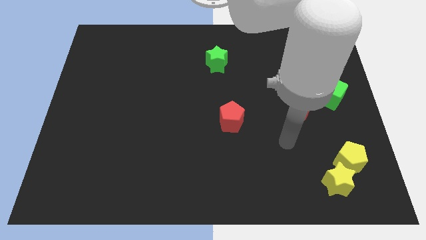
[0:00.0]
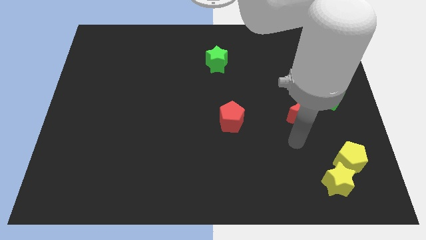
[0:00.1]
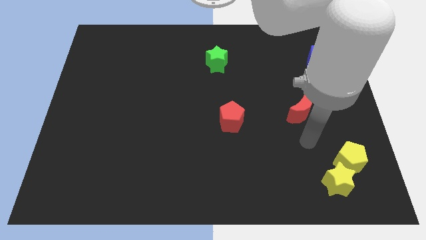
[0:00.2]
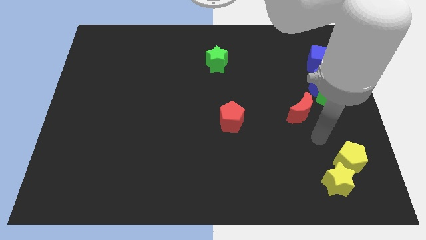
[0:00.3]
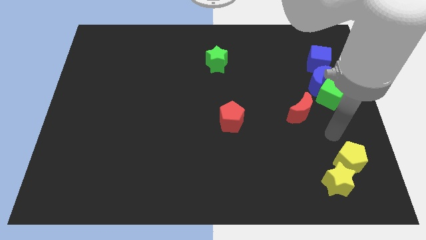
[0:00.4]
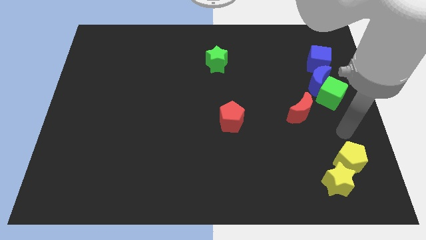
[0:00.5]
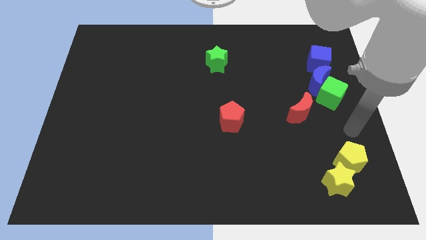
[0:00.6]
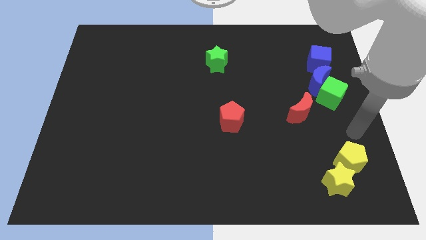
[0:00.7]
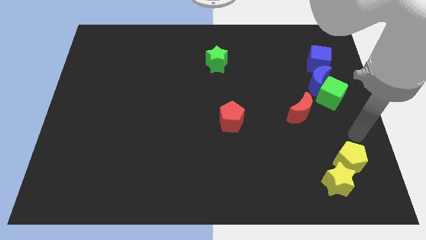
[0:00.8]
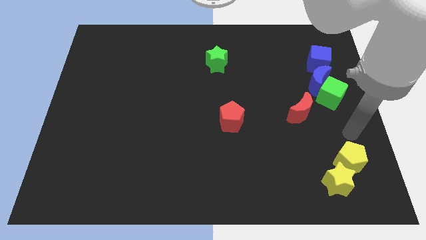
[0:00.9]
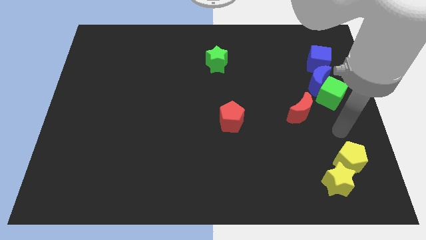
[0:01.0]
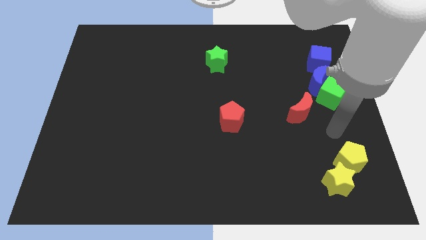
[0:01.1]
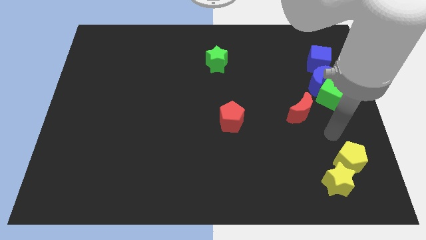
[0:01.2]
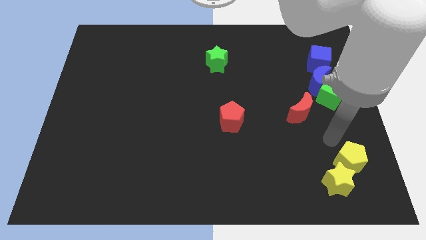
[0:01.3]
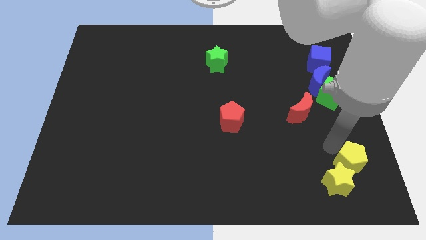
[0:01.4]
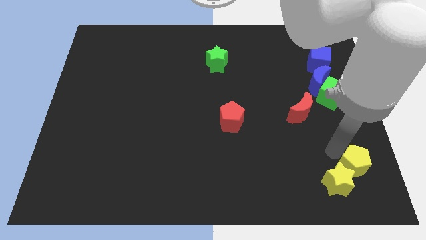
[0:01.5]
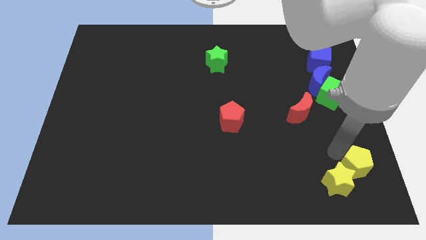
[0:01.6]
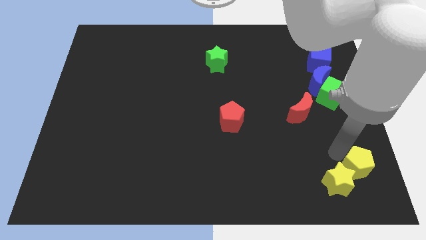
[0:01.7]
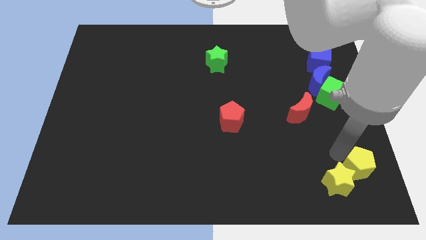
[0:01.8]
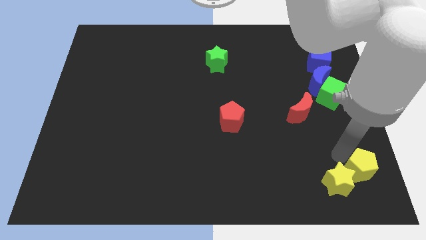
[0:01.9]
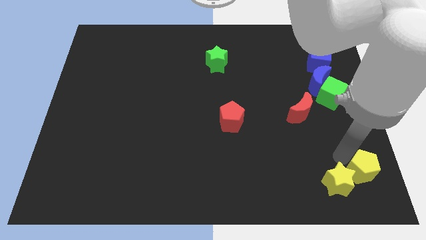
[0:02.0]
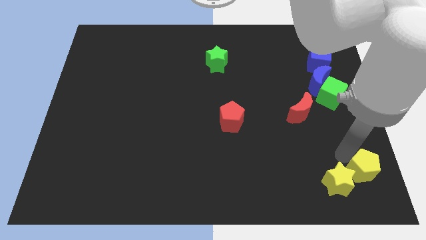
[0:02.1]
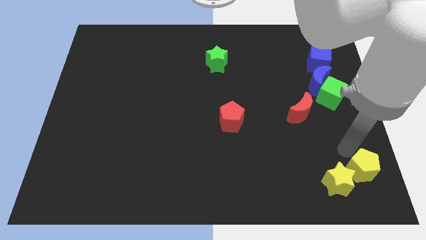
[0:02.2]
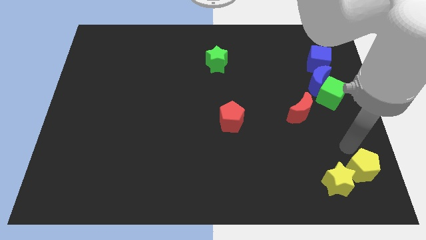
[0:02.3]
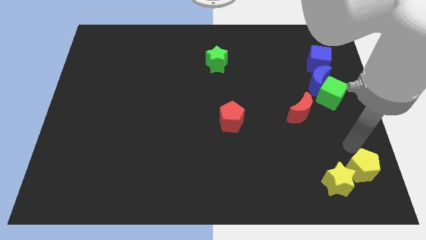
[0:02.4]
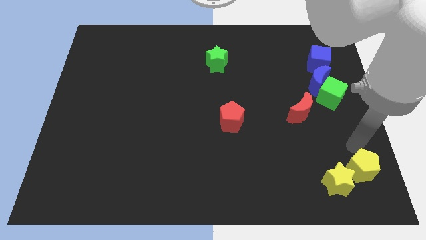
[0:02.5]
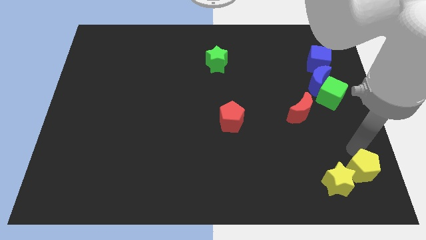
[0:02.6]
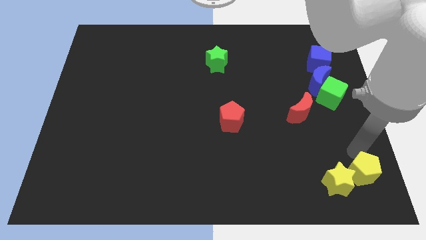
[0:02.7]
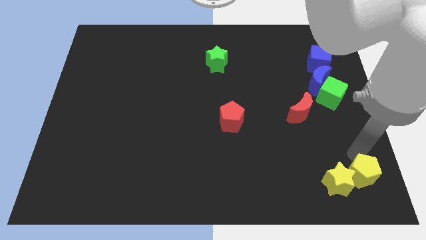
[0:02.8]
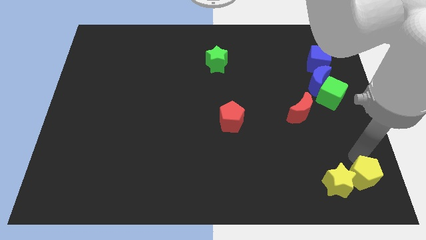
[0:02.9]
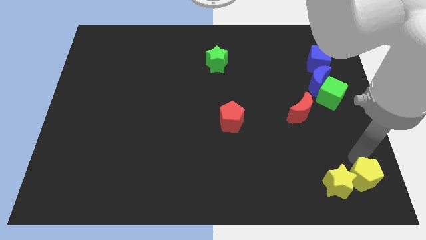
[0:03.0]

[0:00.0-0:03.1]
move the yellow pentagon into the yellow star

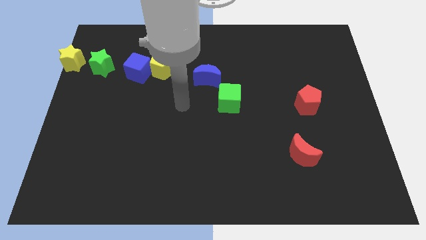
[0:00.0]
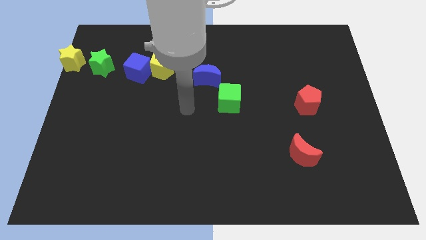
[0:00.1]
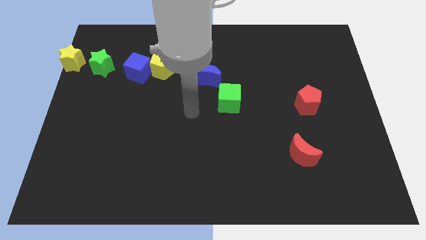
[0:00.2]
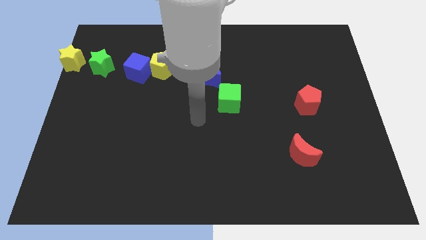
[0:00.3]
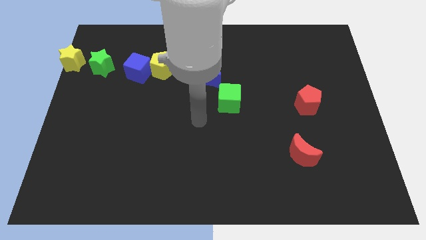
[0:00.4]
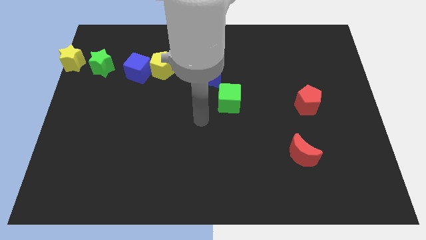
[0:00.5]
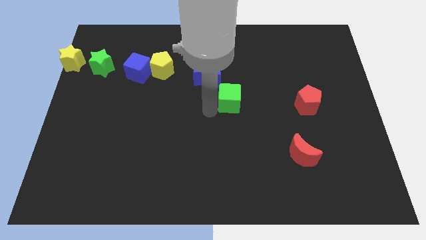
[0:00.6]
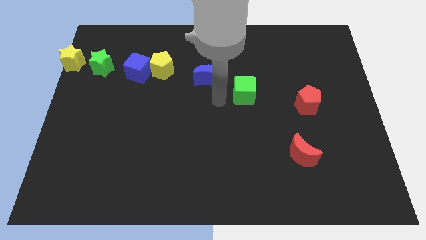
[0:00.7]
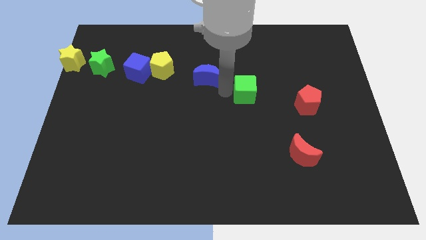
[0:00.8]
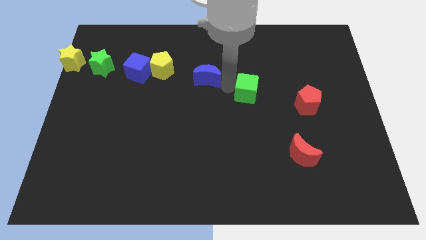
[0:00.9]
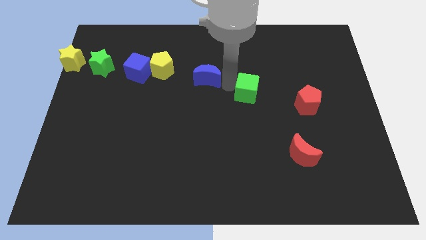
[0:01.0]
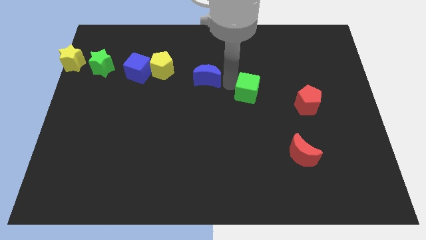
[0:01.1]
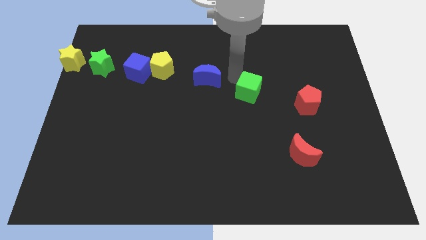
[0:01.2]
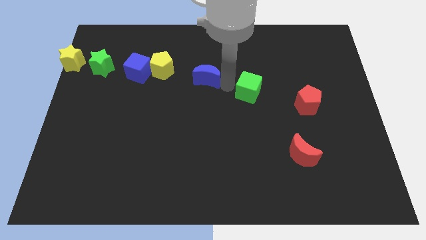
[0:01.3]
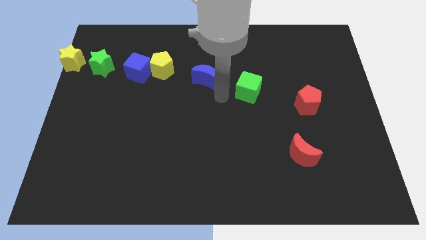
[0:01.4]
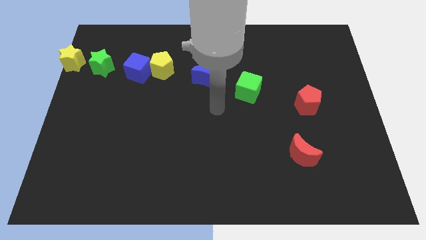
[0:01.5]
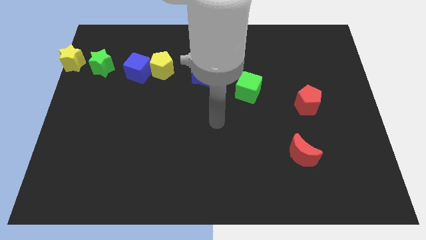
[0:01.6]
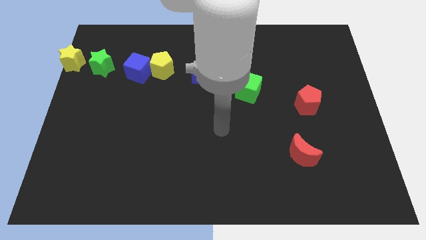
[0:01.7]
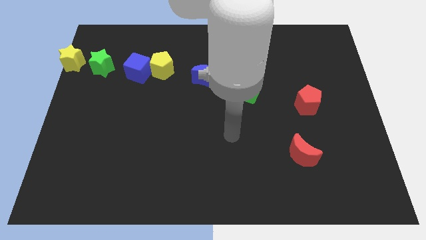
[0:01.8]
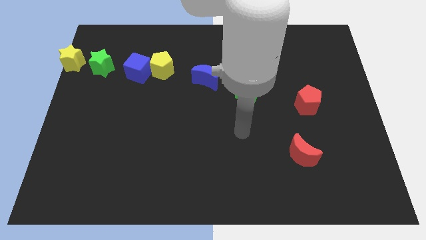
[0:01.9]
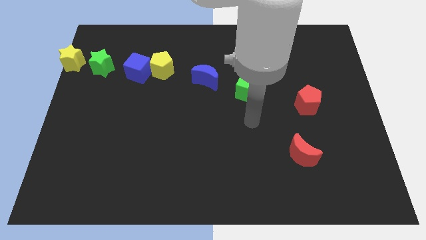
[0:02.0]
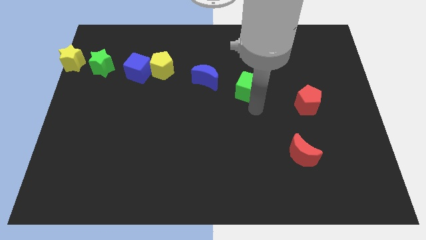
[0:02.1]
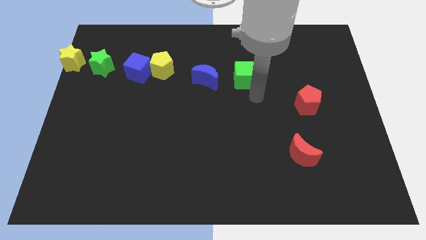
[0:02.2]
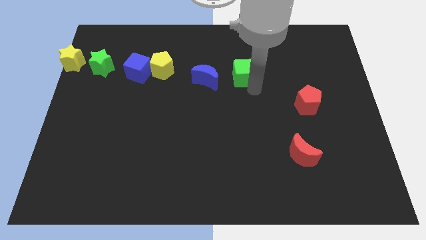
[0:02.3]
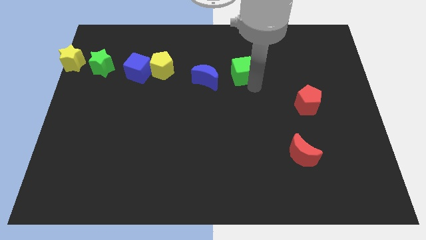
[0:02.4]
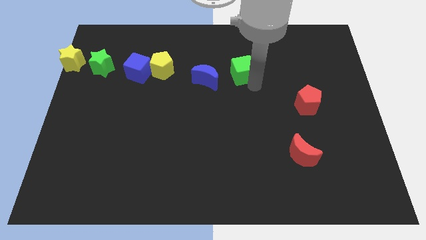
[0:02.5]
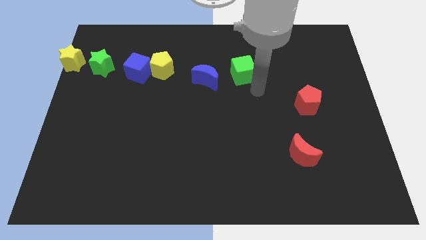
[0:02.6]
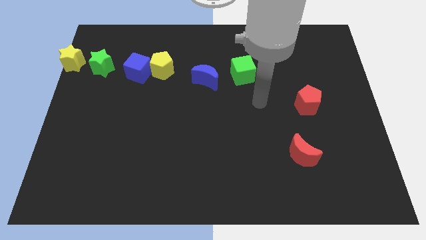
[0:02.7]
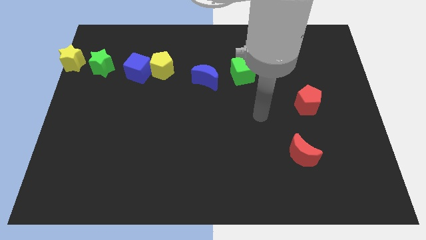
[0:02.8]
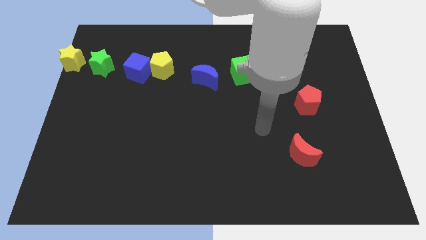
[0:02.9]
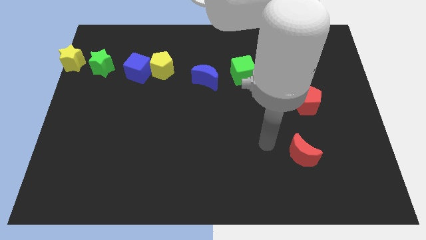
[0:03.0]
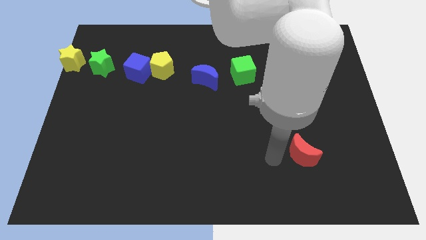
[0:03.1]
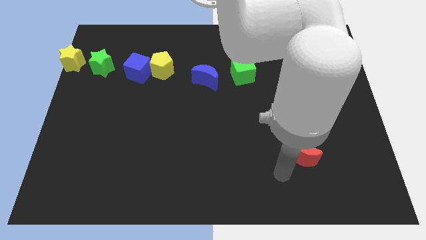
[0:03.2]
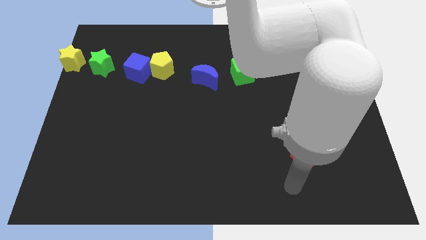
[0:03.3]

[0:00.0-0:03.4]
place the green cube to the right of the blue moon

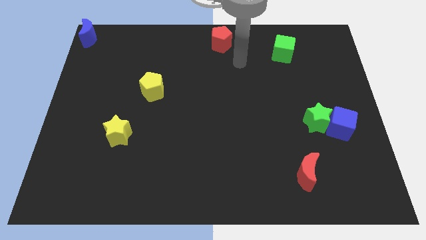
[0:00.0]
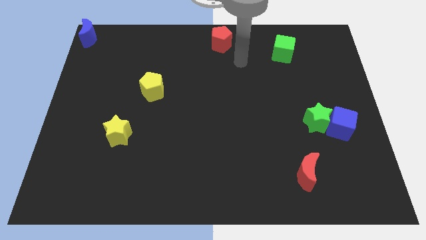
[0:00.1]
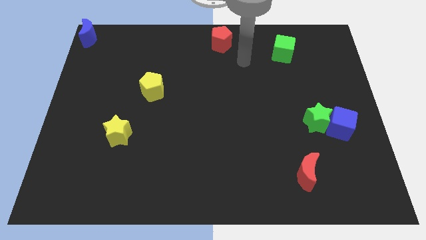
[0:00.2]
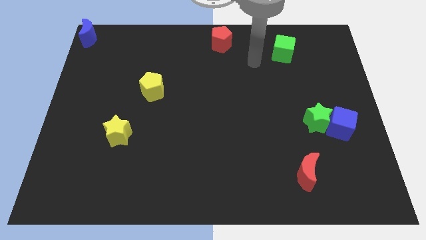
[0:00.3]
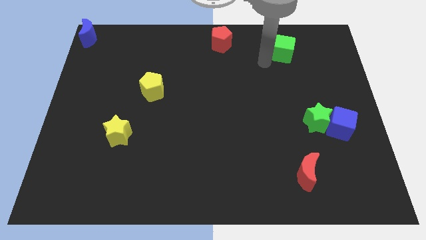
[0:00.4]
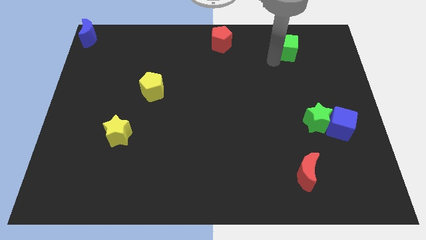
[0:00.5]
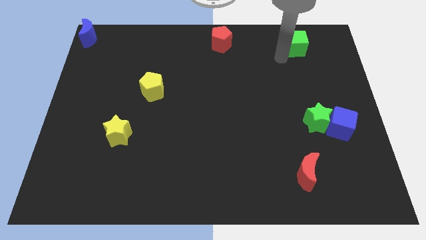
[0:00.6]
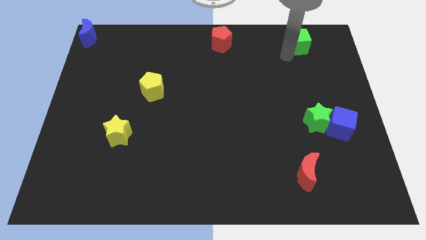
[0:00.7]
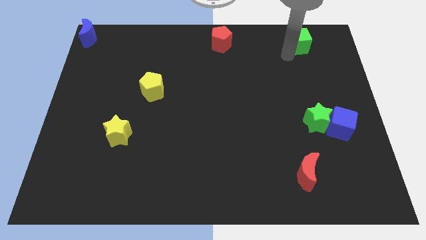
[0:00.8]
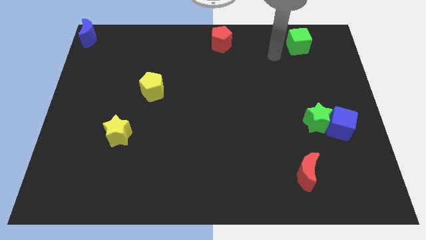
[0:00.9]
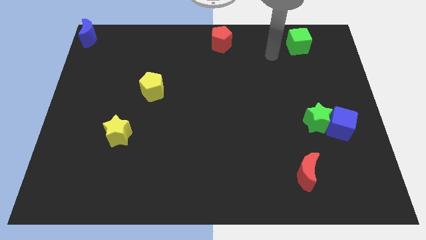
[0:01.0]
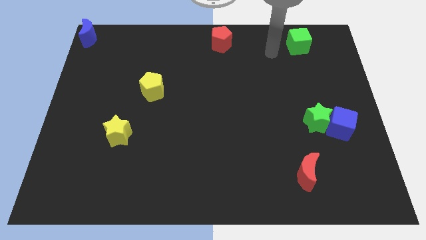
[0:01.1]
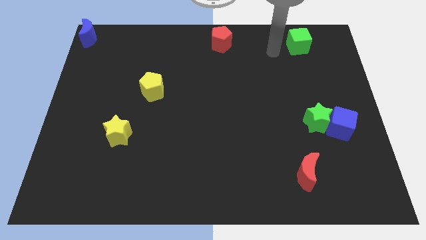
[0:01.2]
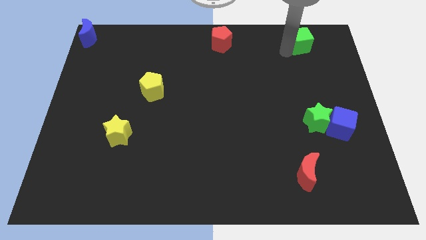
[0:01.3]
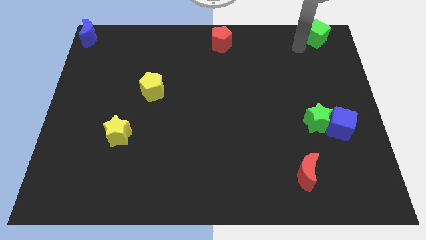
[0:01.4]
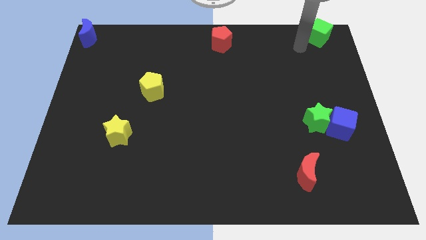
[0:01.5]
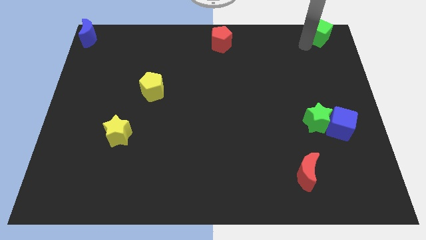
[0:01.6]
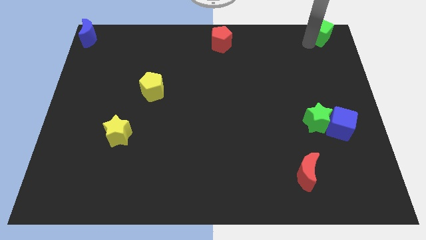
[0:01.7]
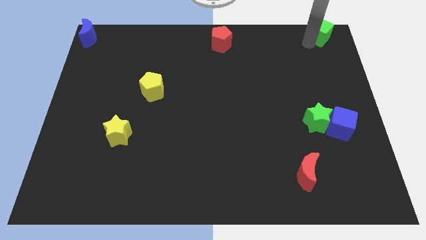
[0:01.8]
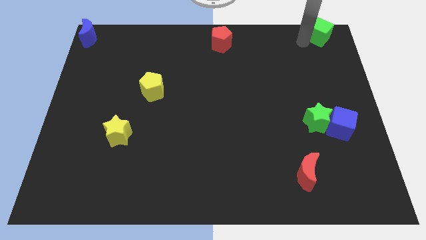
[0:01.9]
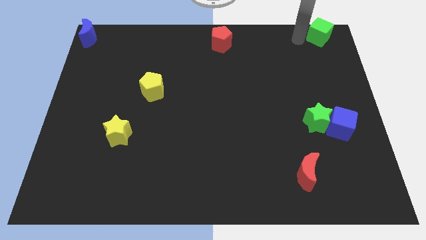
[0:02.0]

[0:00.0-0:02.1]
push the green cube towards the top right corner of the board

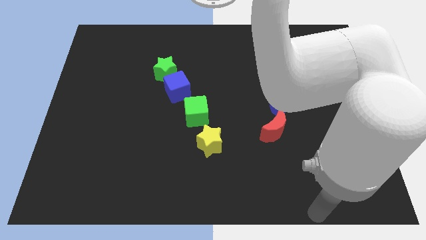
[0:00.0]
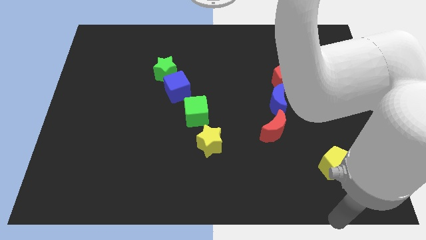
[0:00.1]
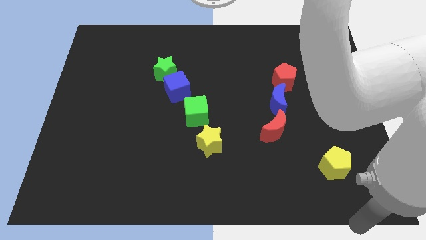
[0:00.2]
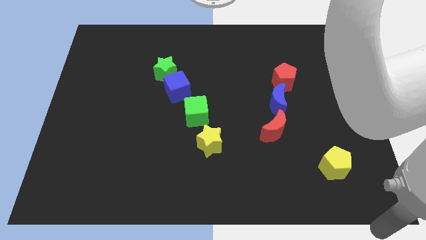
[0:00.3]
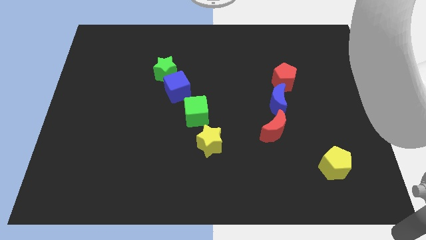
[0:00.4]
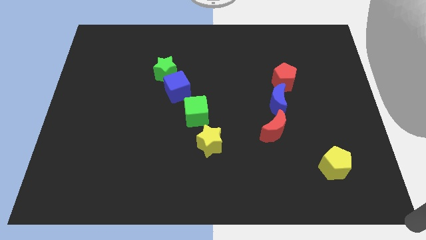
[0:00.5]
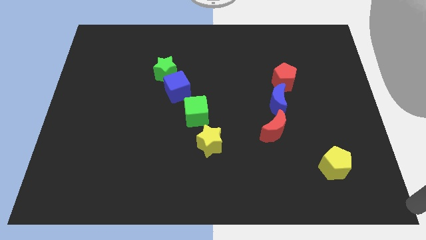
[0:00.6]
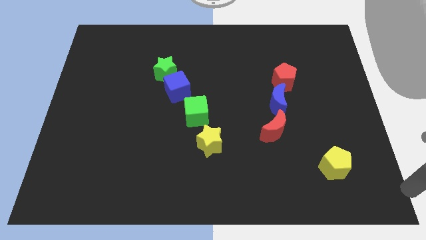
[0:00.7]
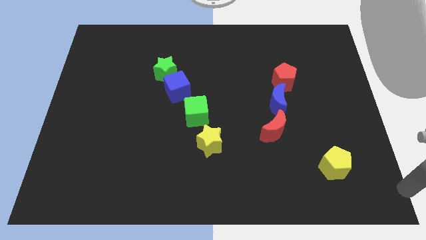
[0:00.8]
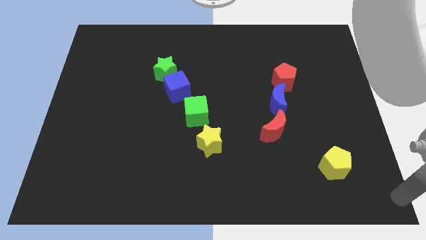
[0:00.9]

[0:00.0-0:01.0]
place your arm to the bottom right side of the board
